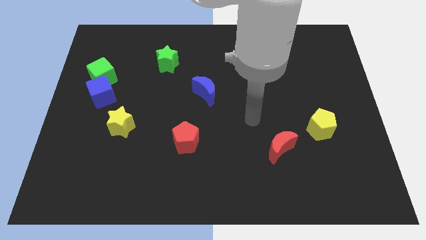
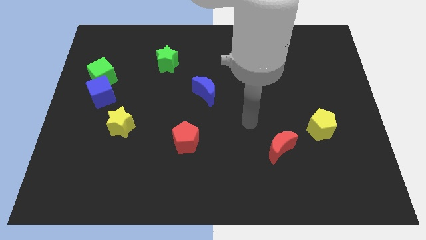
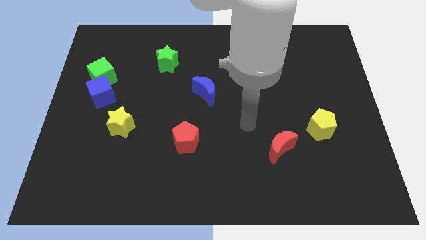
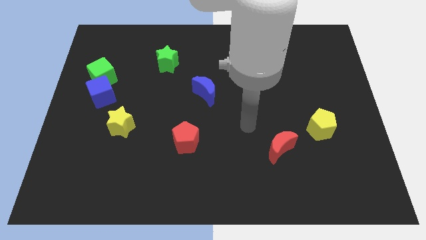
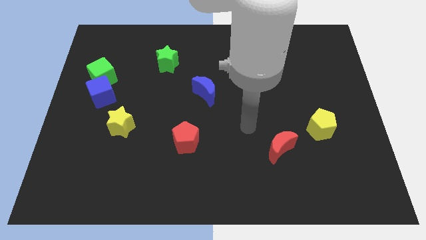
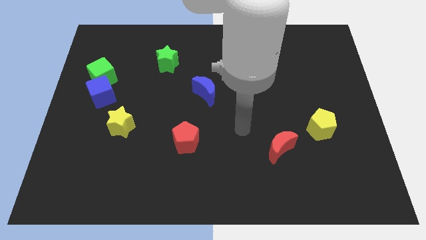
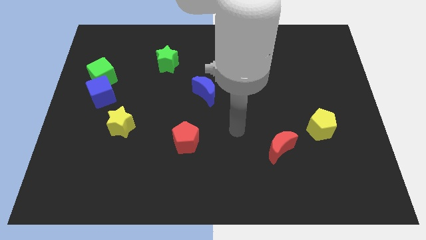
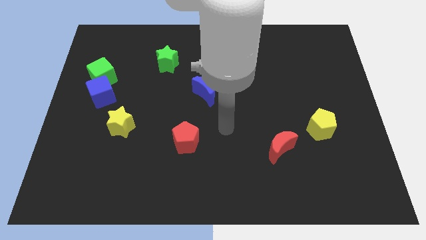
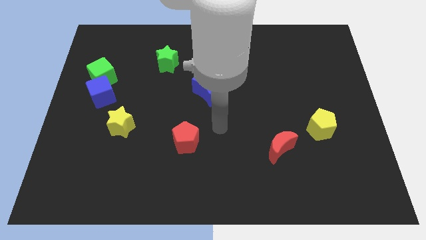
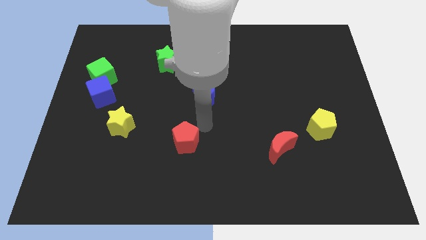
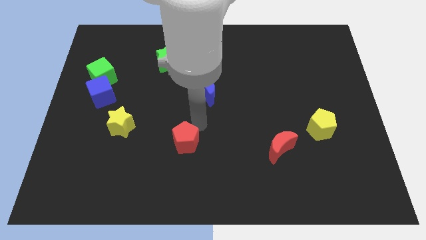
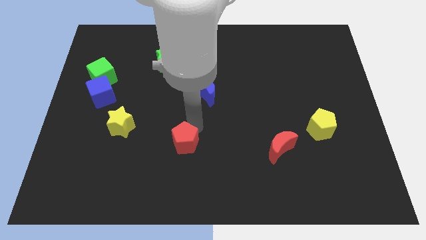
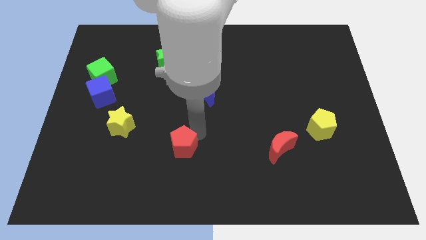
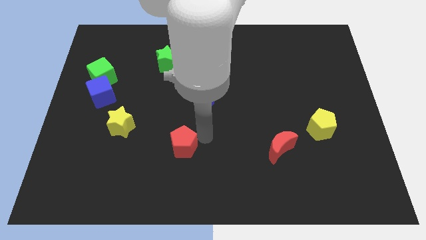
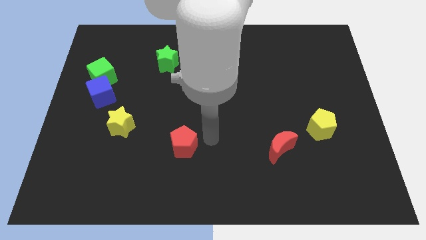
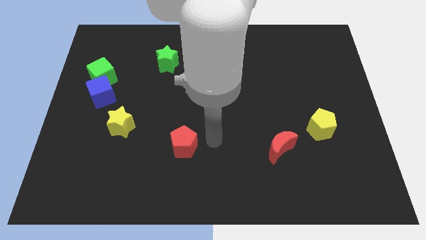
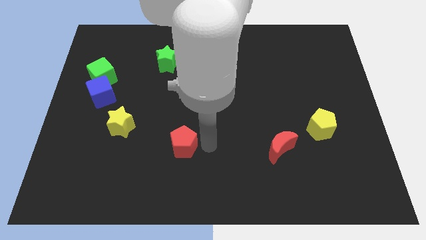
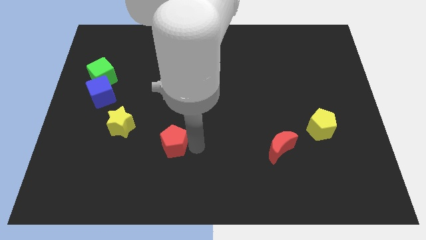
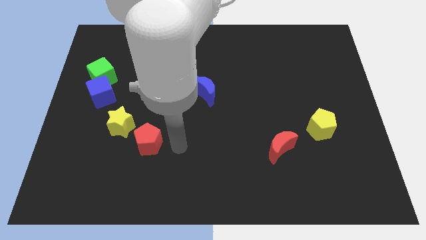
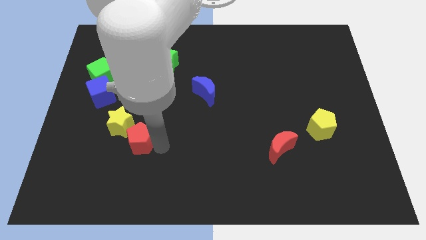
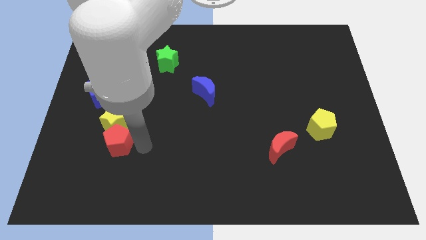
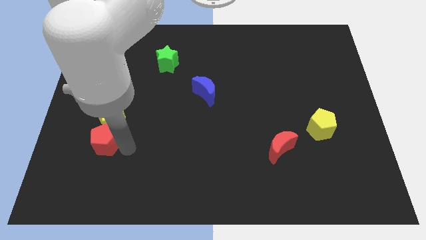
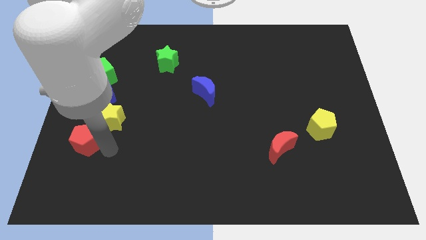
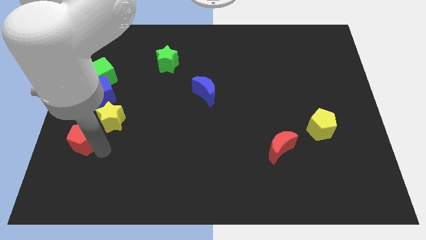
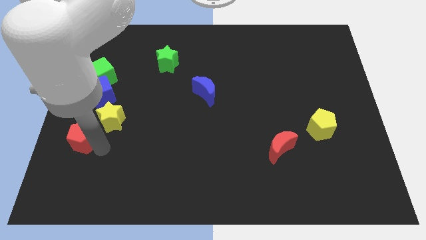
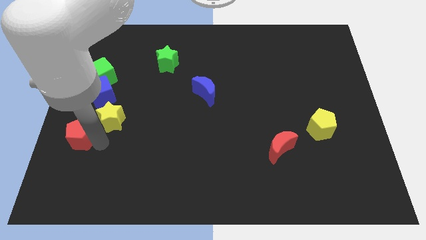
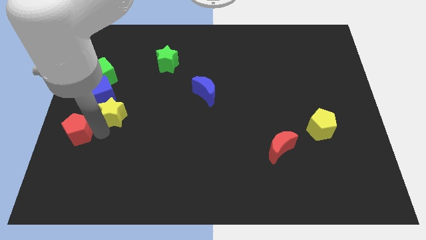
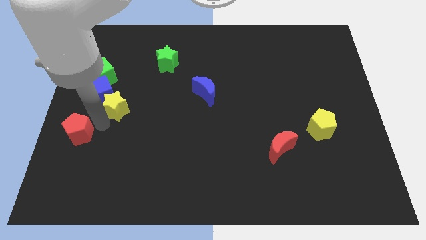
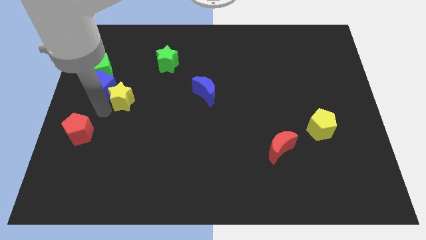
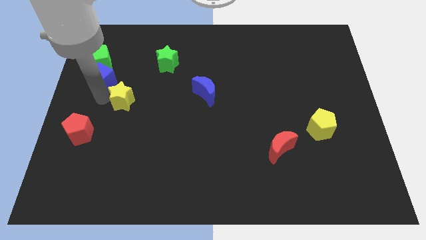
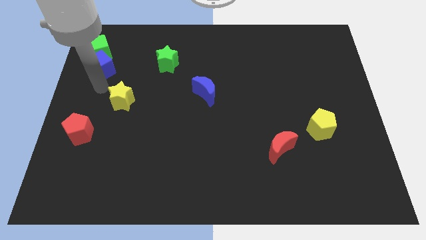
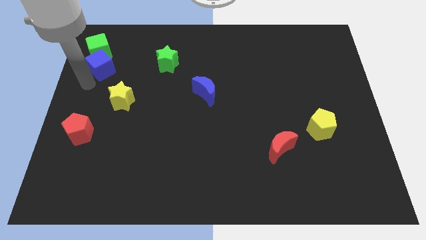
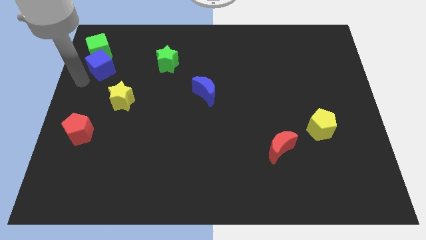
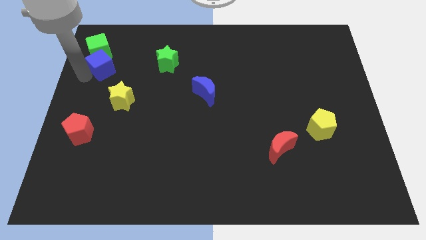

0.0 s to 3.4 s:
move the red pentagon to the left of the board

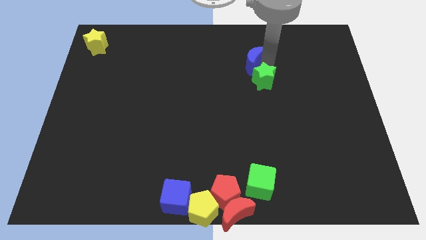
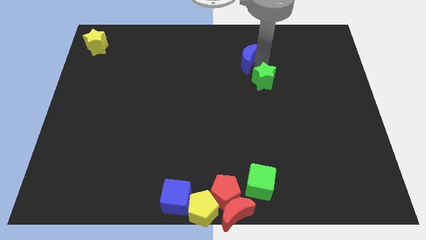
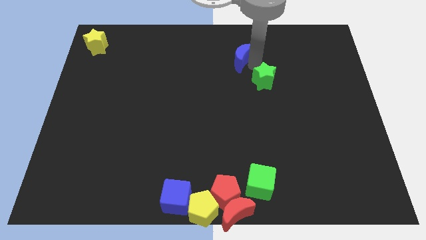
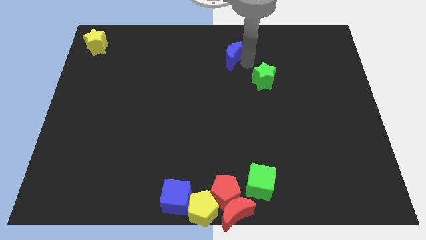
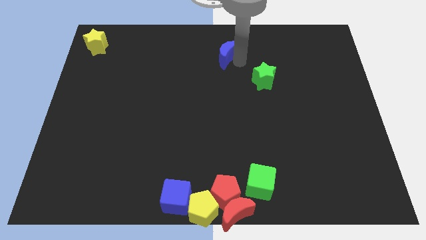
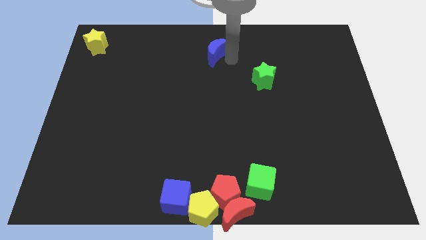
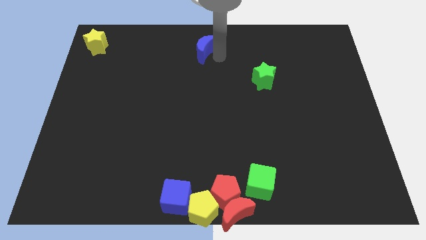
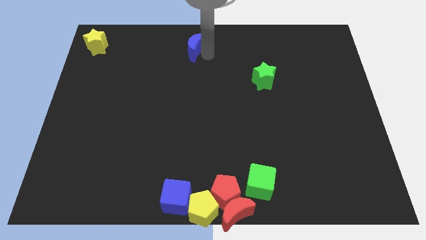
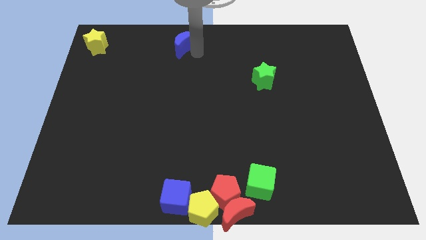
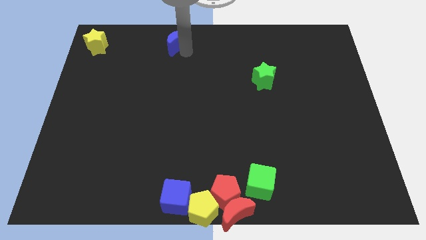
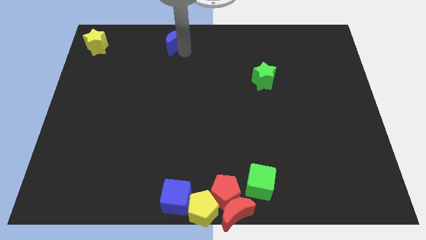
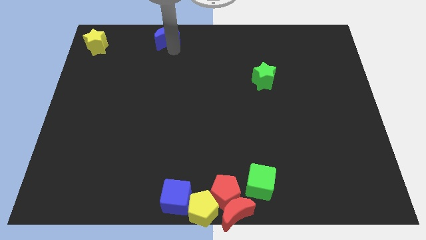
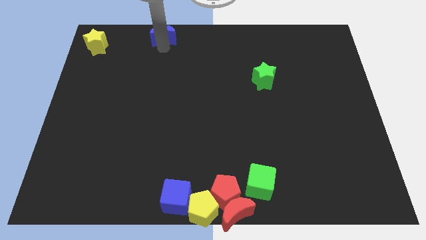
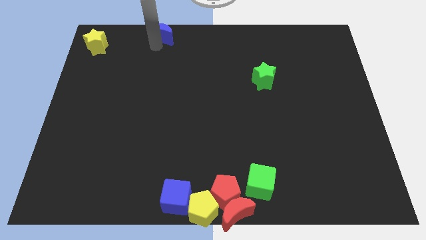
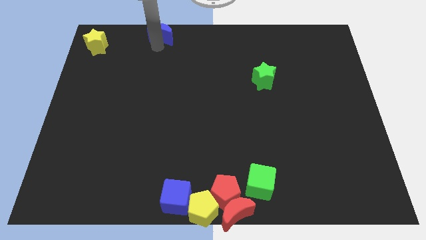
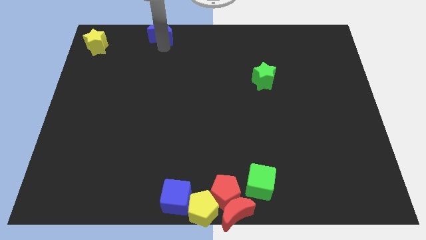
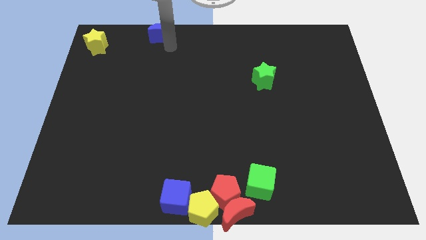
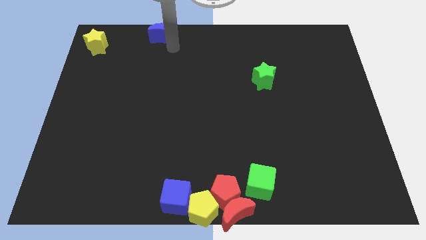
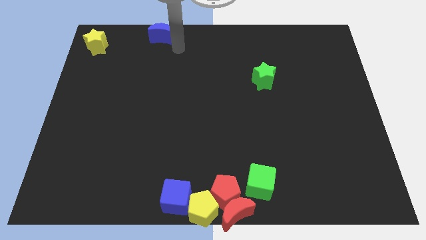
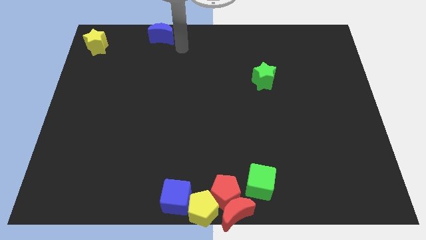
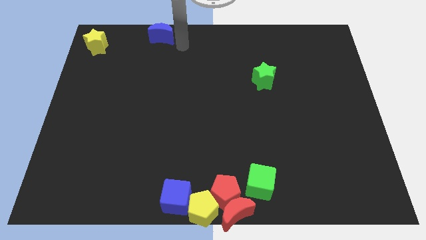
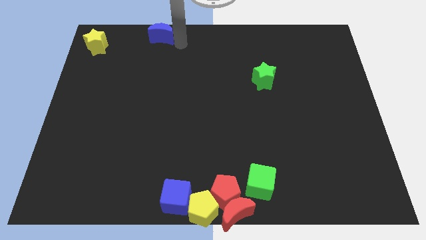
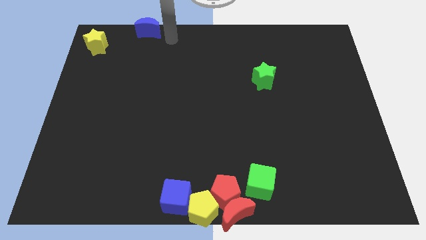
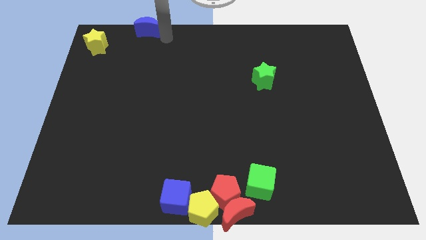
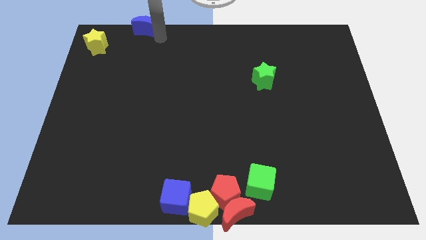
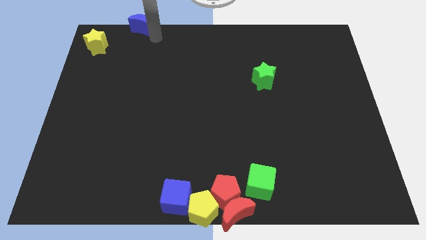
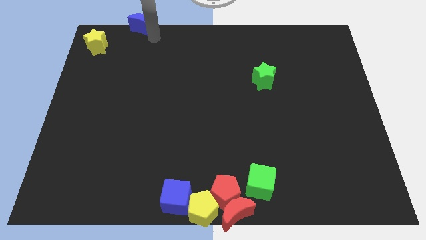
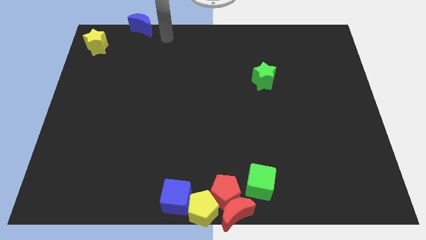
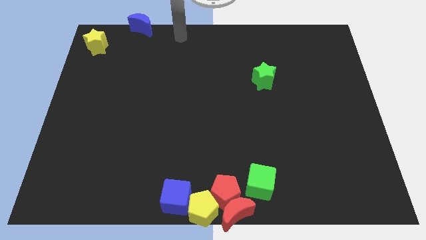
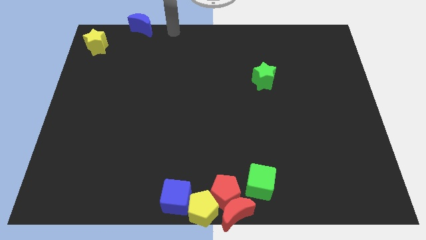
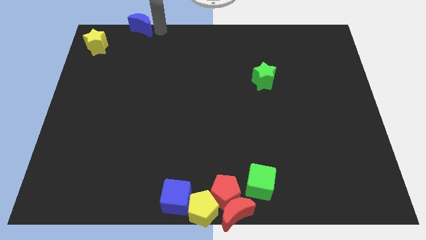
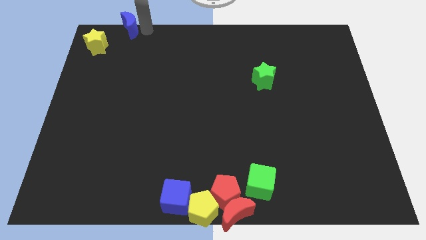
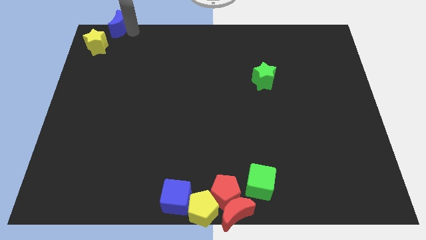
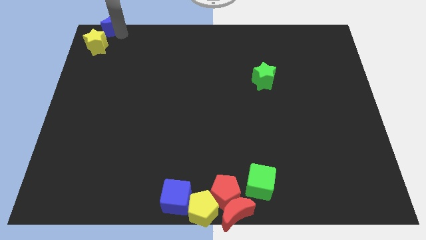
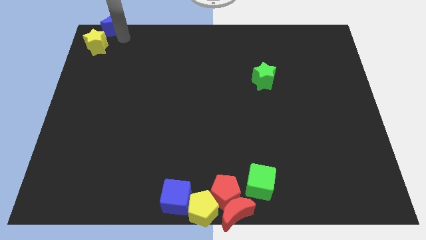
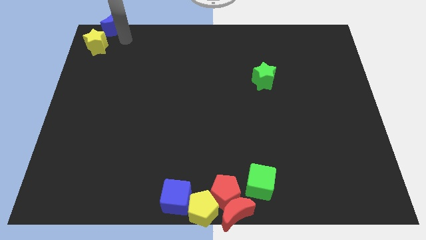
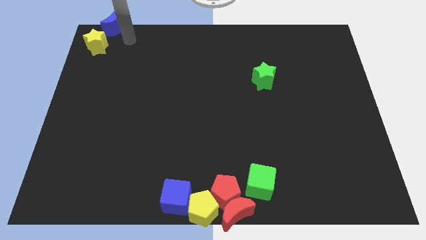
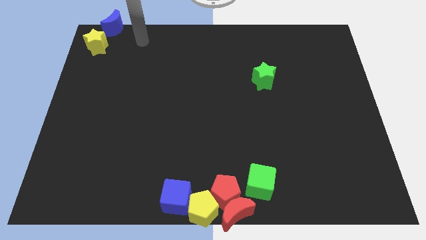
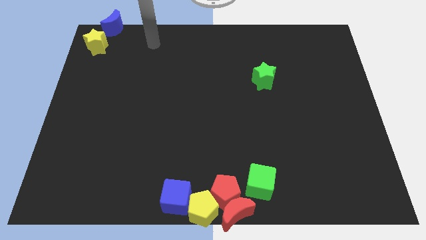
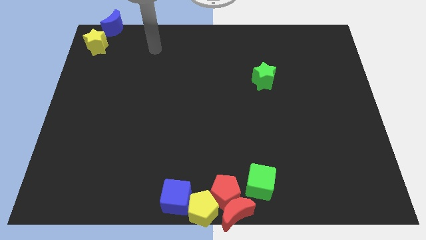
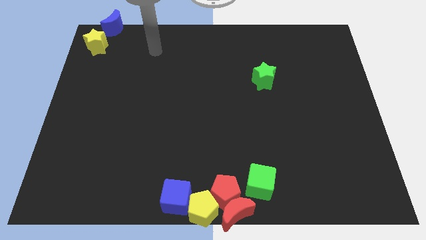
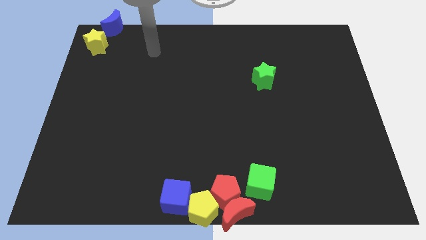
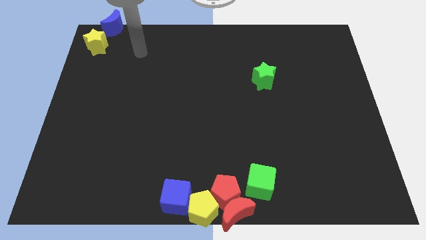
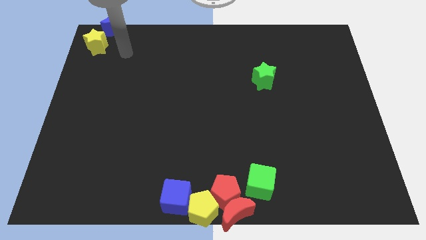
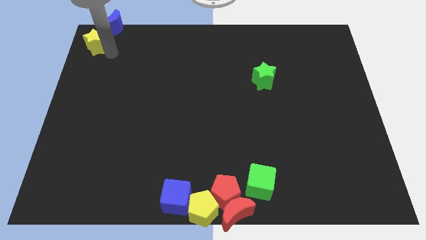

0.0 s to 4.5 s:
place the blue moon at the top of the yellow star

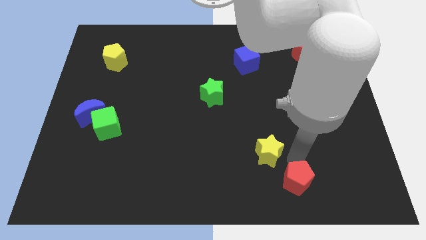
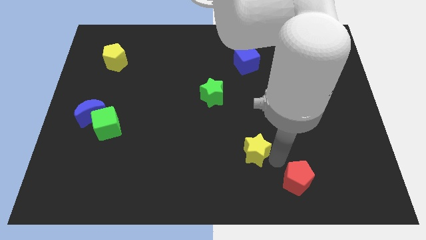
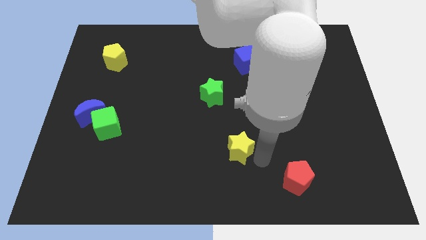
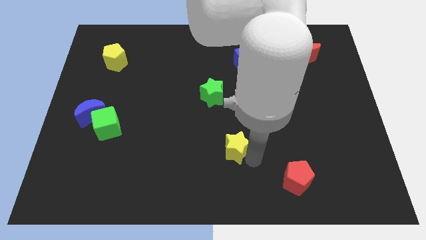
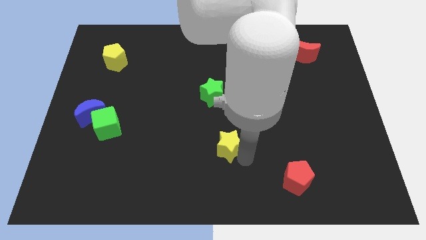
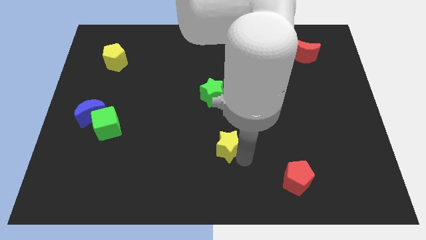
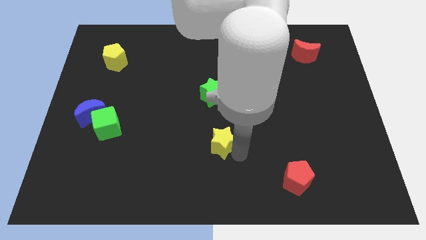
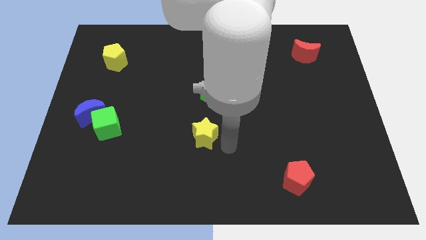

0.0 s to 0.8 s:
place yellow star to the bottom of the green star

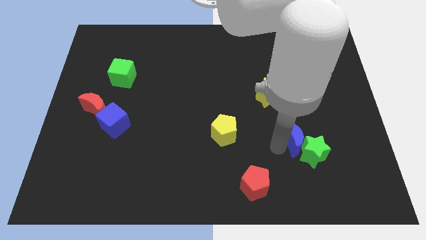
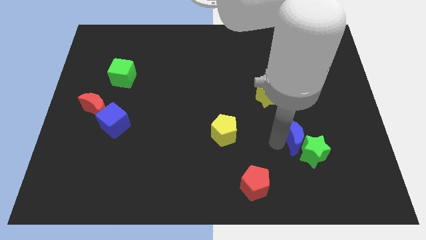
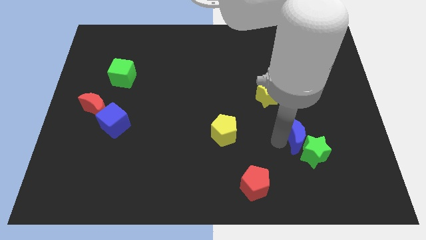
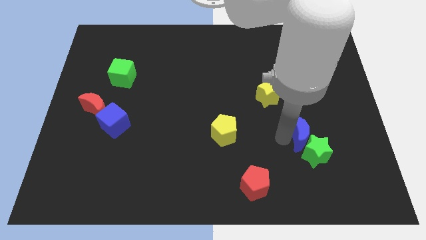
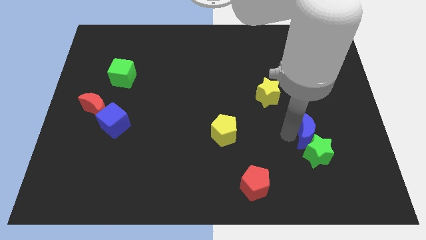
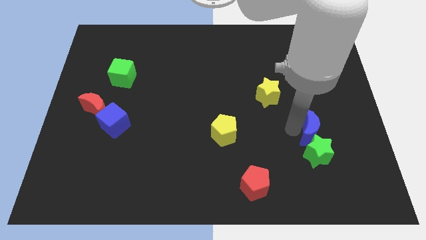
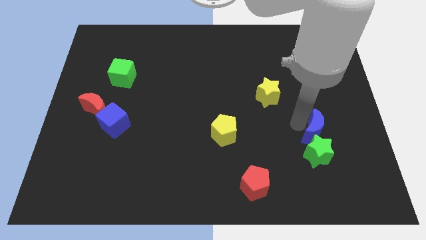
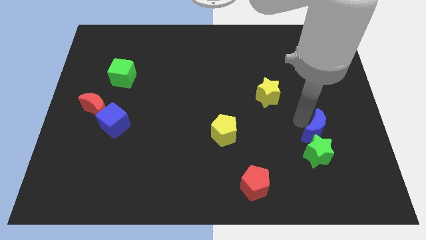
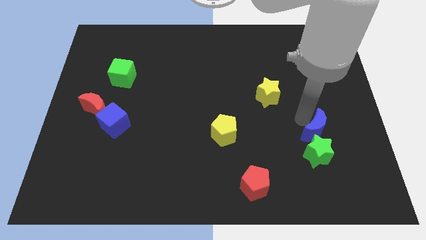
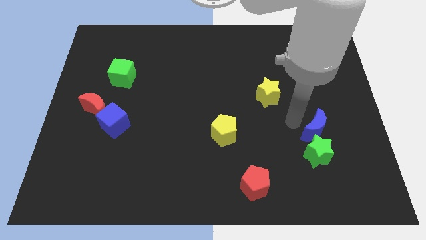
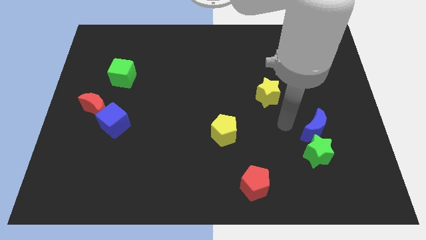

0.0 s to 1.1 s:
push the blue moon into the green star
